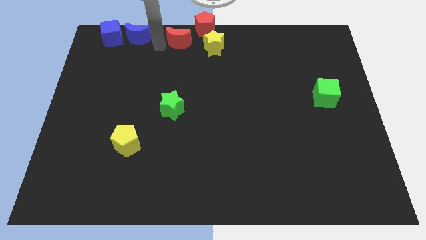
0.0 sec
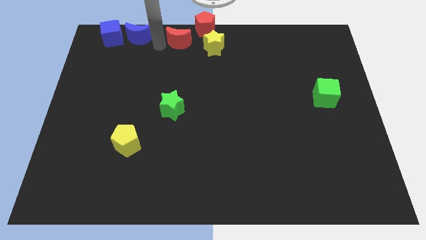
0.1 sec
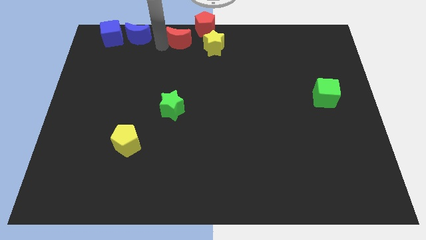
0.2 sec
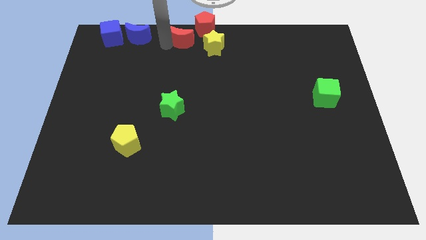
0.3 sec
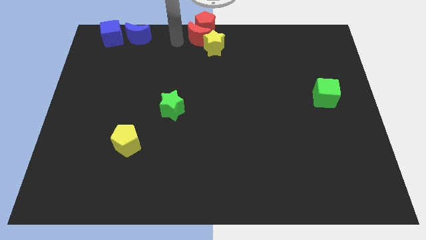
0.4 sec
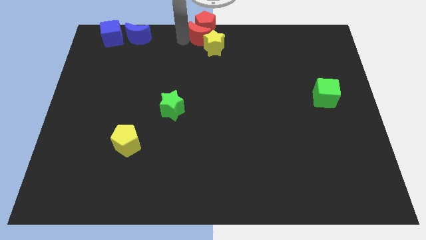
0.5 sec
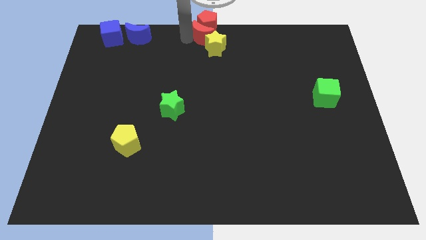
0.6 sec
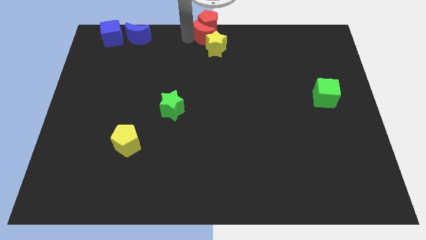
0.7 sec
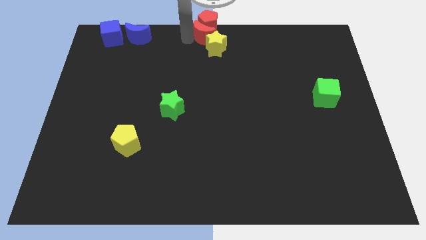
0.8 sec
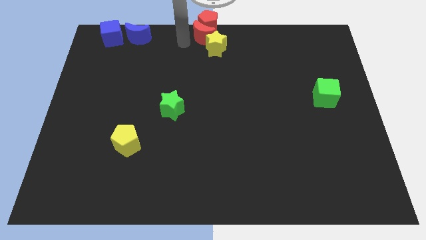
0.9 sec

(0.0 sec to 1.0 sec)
place red crescent below the red pentagon

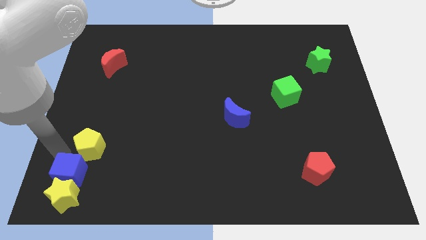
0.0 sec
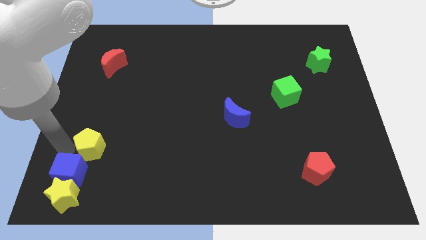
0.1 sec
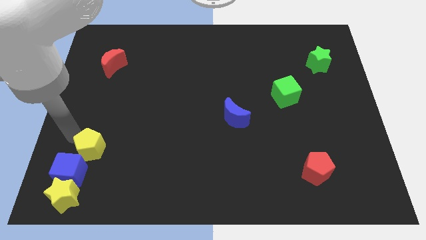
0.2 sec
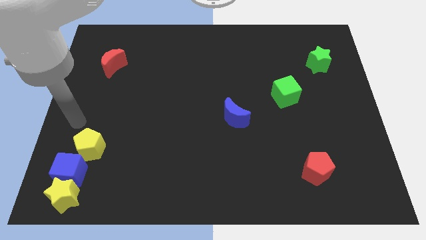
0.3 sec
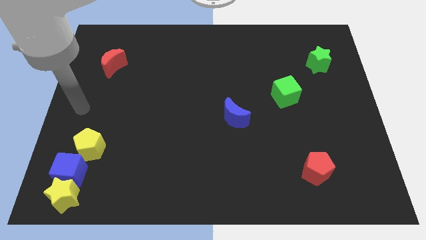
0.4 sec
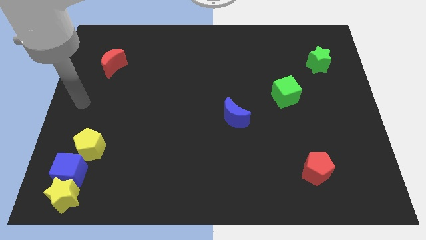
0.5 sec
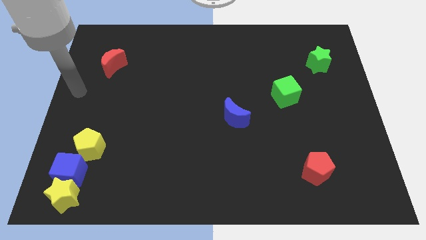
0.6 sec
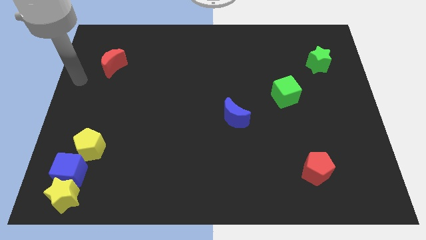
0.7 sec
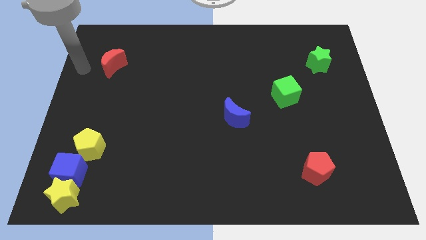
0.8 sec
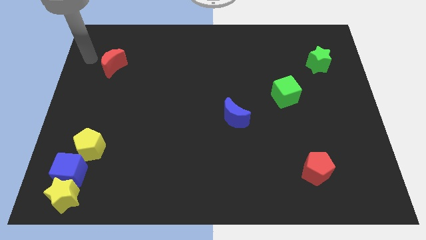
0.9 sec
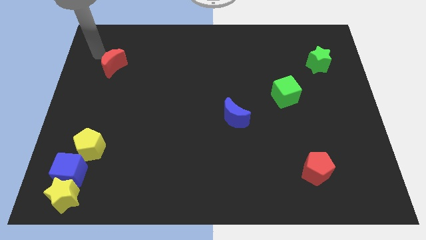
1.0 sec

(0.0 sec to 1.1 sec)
move arm near red moon

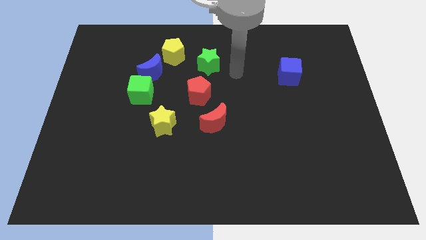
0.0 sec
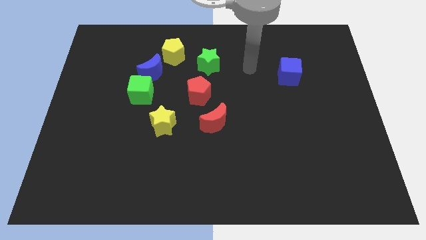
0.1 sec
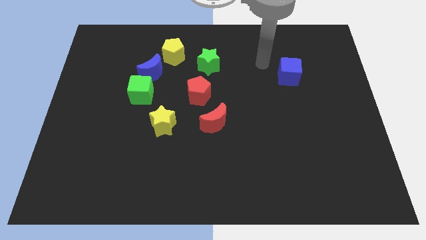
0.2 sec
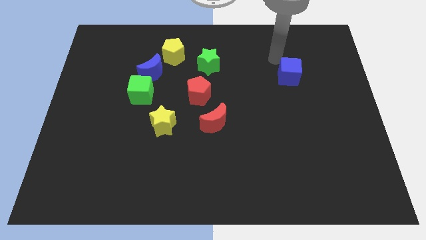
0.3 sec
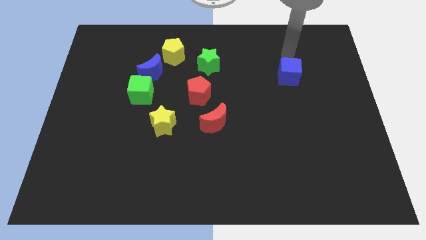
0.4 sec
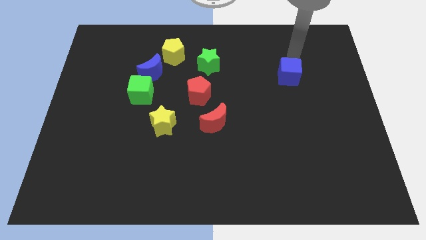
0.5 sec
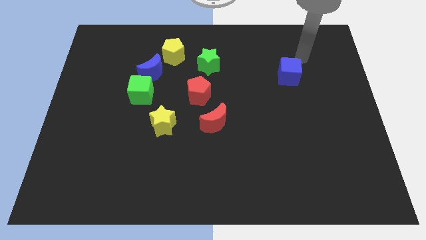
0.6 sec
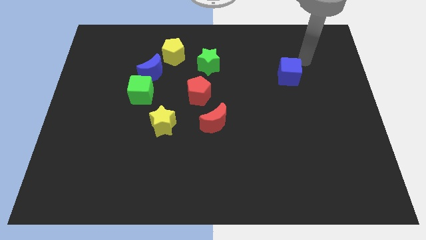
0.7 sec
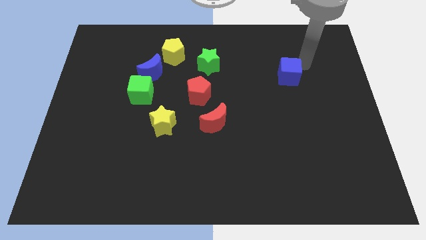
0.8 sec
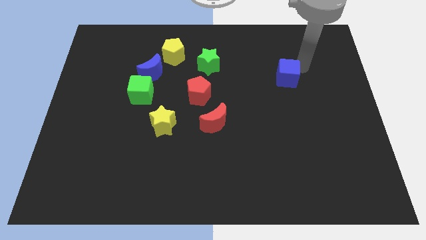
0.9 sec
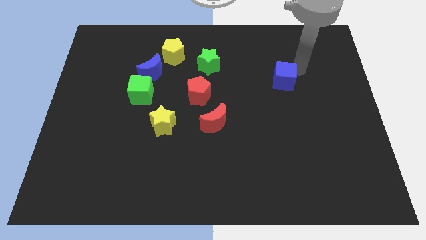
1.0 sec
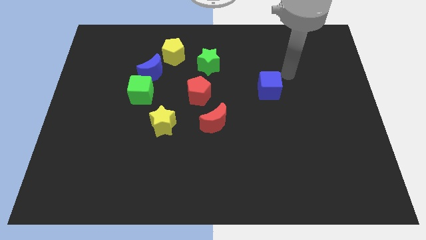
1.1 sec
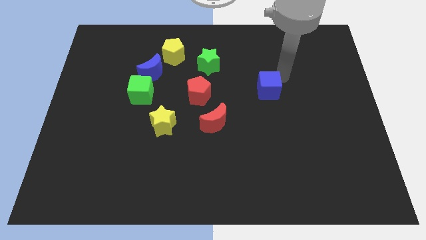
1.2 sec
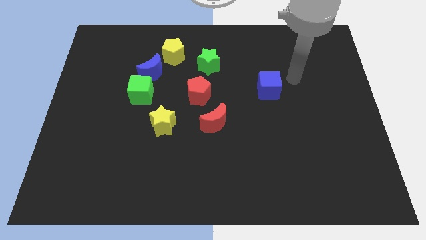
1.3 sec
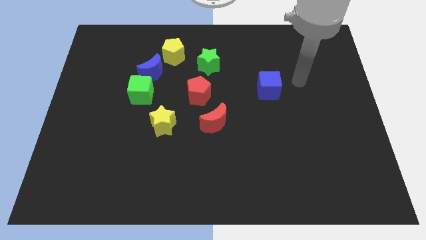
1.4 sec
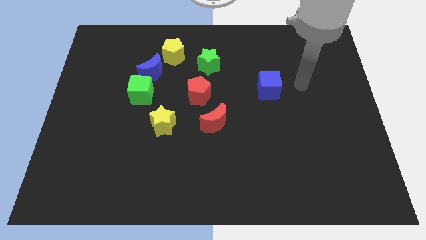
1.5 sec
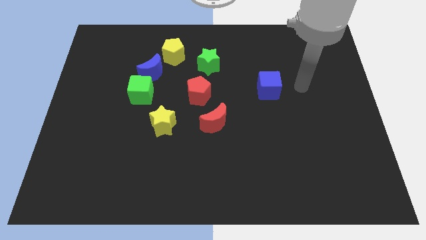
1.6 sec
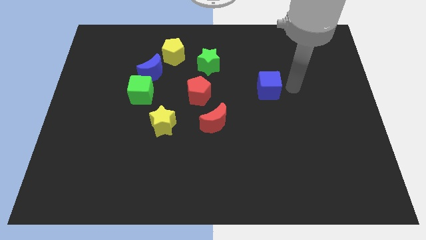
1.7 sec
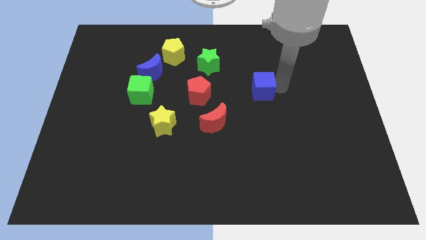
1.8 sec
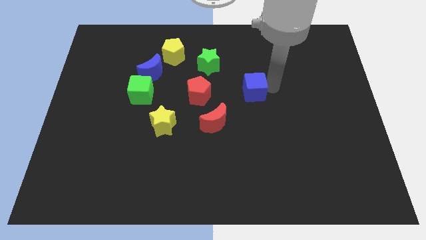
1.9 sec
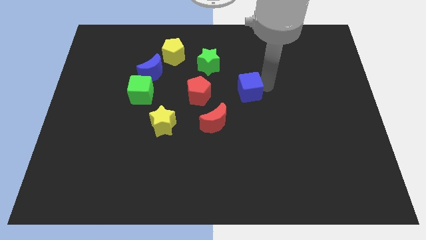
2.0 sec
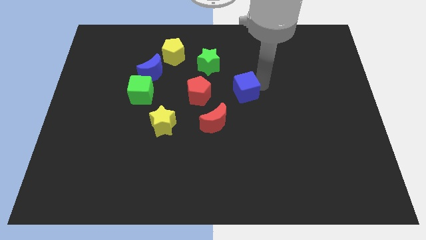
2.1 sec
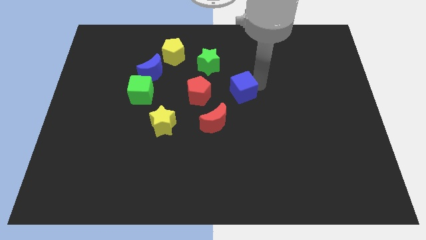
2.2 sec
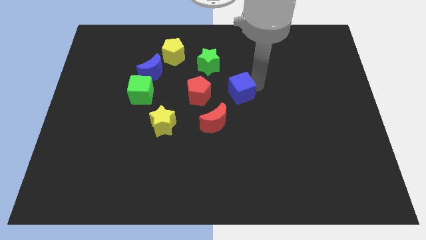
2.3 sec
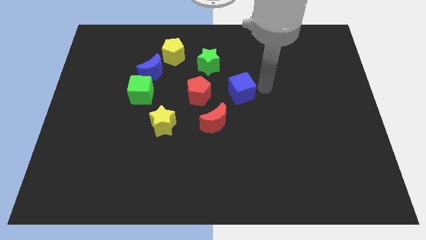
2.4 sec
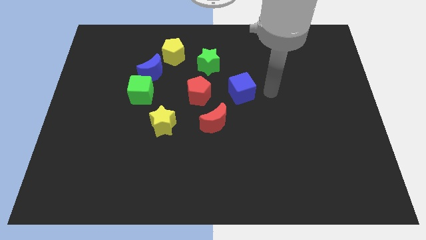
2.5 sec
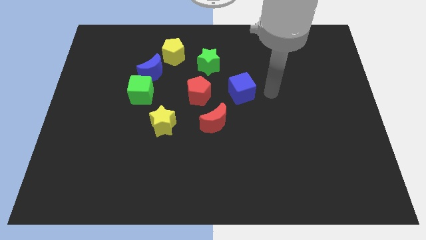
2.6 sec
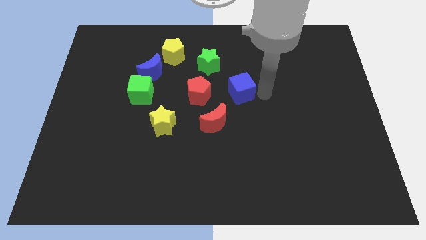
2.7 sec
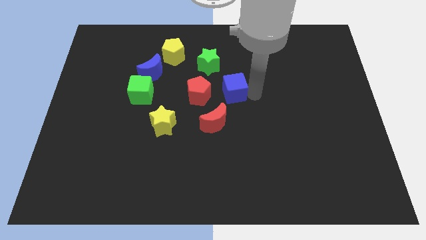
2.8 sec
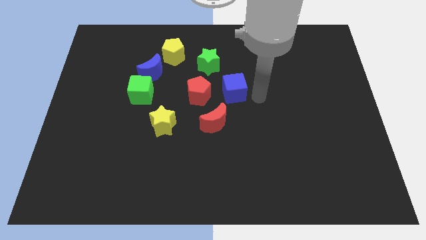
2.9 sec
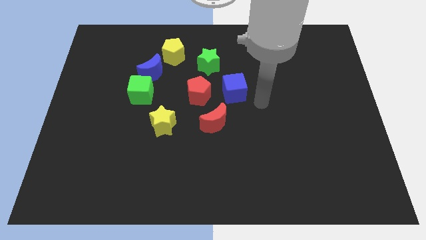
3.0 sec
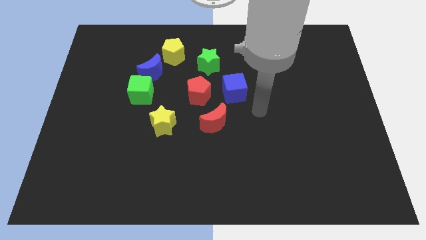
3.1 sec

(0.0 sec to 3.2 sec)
put the blue cube to the right side of the red pentagon

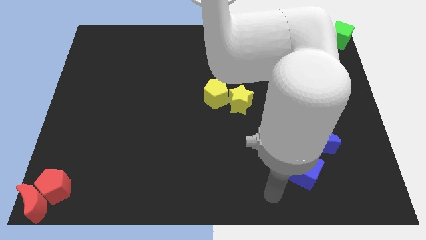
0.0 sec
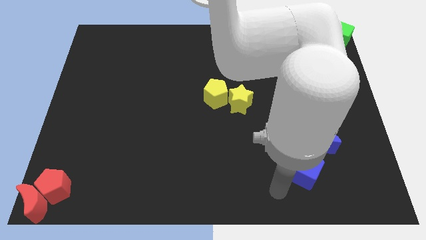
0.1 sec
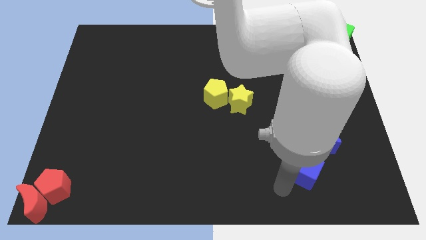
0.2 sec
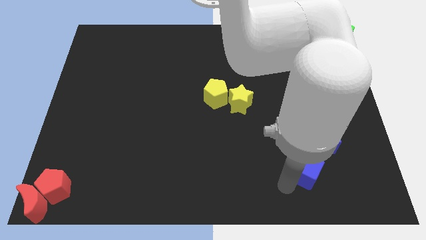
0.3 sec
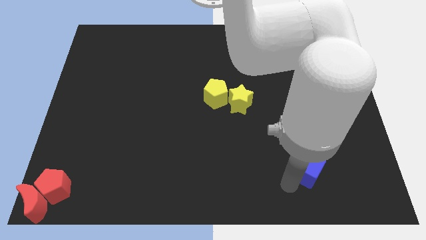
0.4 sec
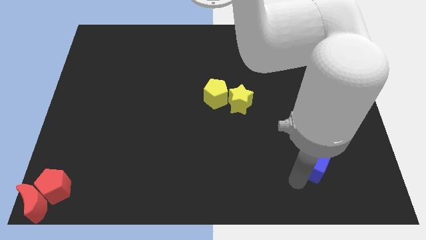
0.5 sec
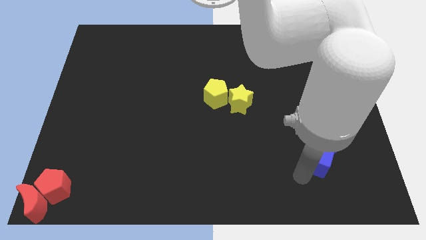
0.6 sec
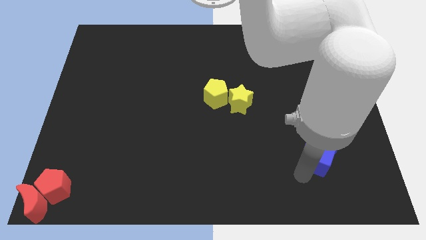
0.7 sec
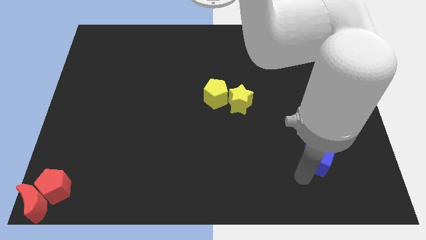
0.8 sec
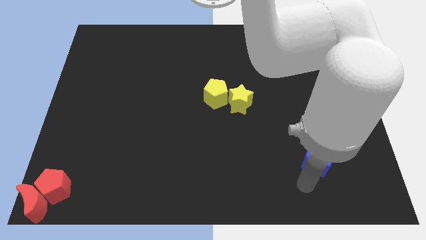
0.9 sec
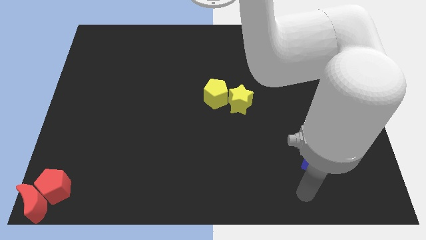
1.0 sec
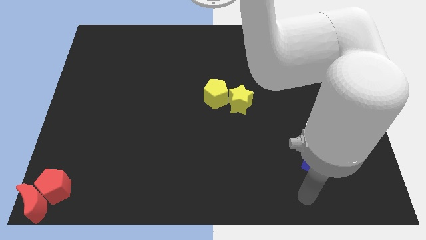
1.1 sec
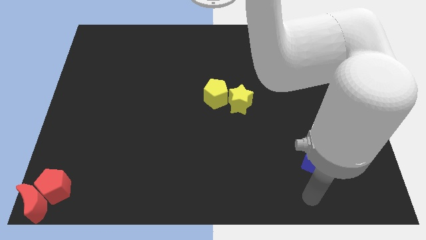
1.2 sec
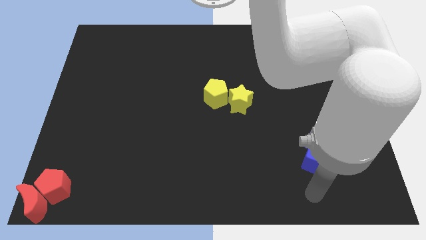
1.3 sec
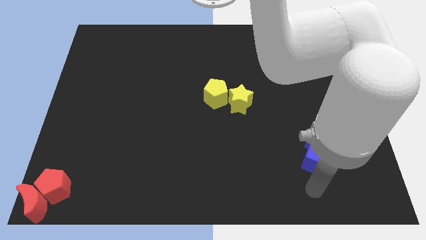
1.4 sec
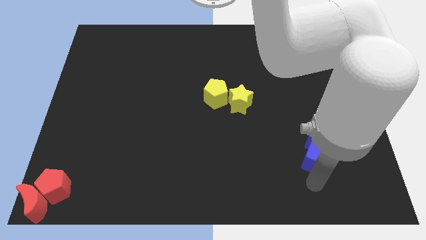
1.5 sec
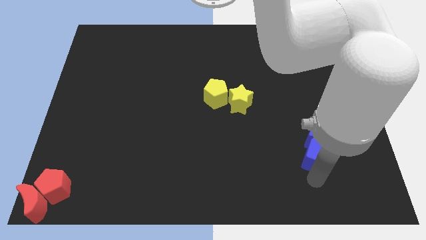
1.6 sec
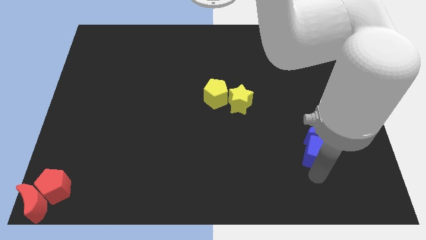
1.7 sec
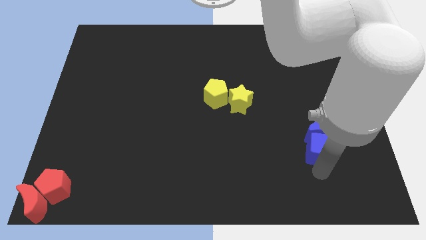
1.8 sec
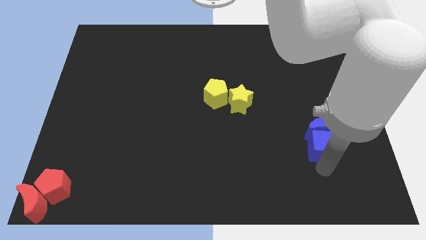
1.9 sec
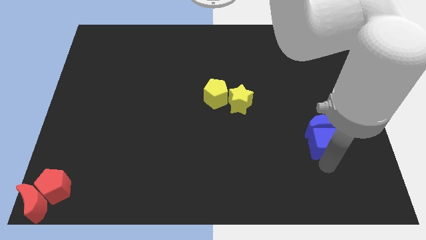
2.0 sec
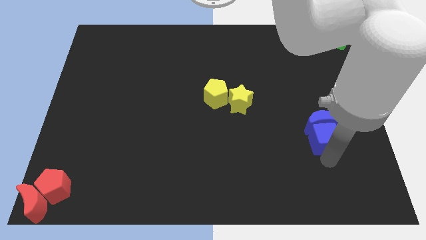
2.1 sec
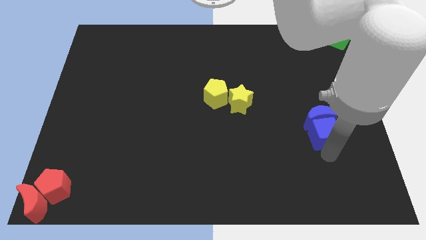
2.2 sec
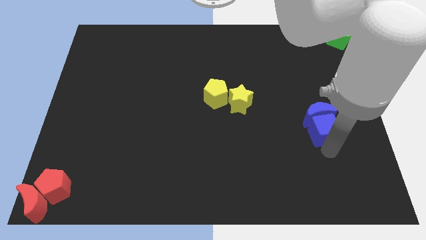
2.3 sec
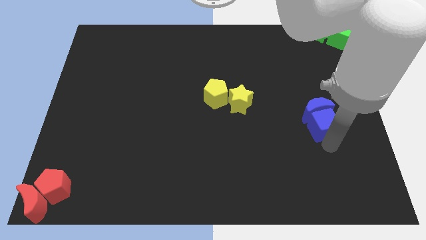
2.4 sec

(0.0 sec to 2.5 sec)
push the blue cube into the blue moon

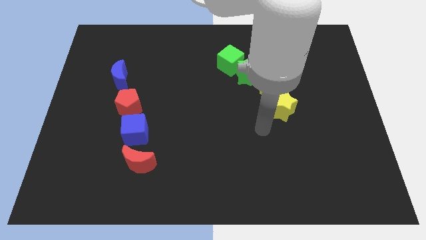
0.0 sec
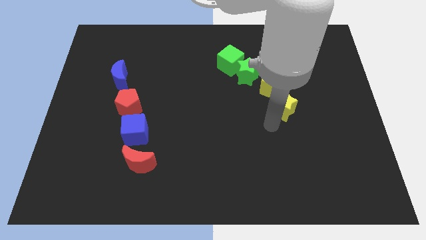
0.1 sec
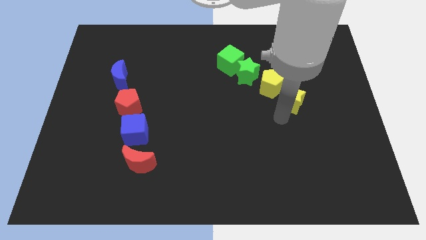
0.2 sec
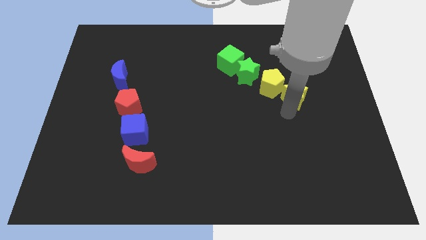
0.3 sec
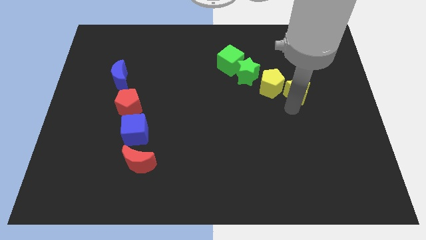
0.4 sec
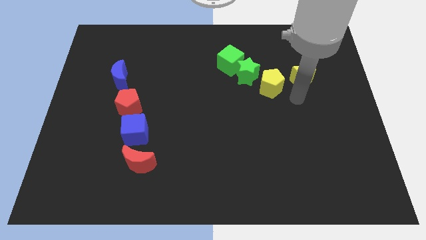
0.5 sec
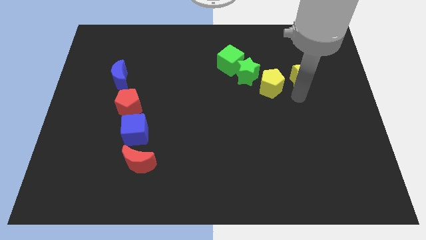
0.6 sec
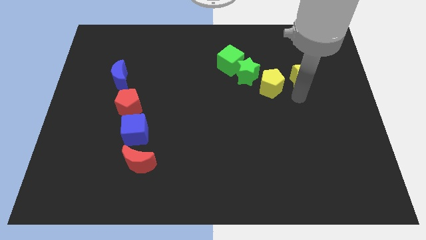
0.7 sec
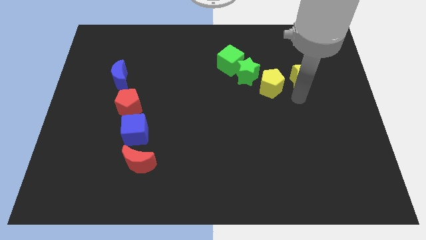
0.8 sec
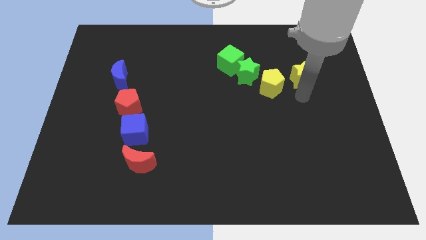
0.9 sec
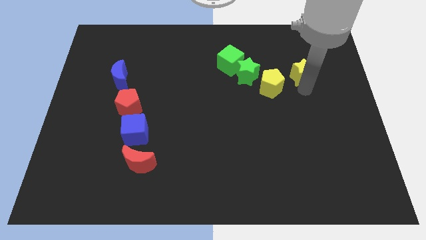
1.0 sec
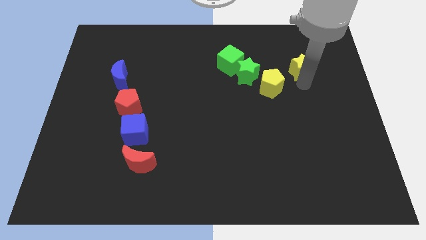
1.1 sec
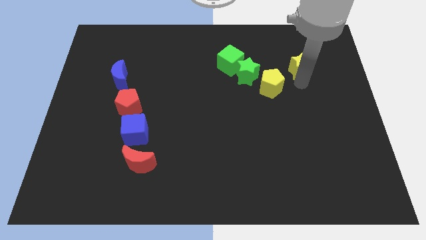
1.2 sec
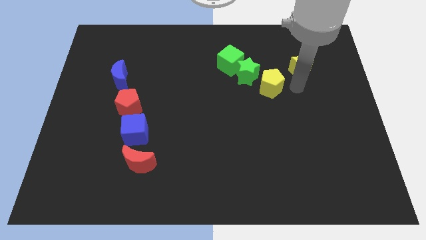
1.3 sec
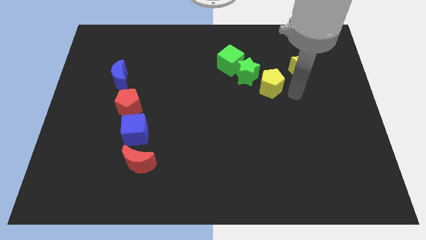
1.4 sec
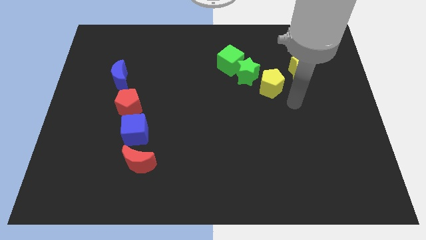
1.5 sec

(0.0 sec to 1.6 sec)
move the yellow star to the top right side of the yellow pentagon
